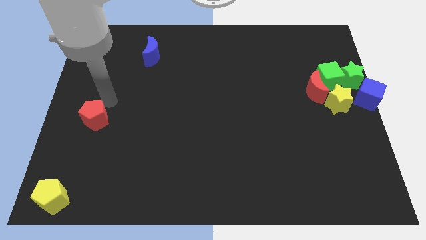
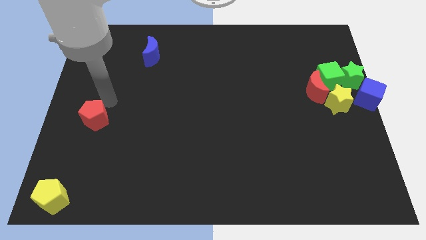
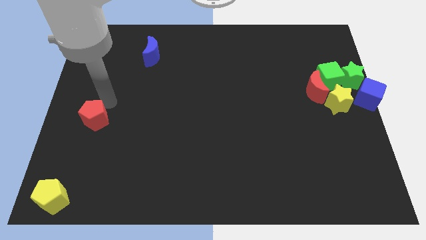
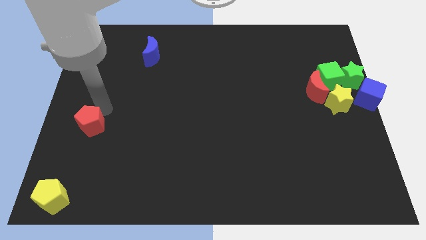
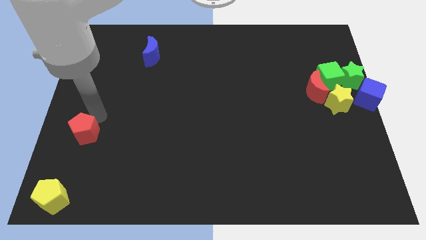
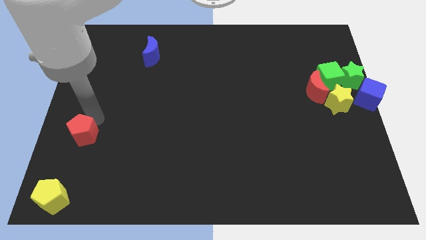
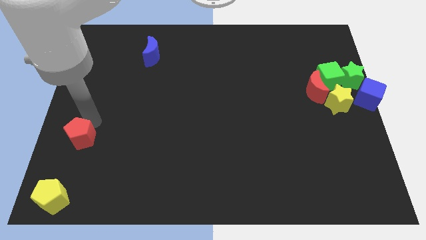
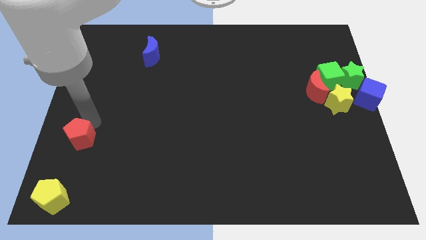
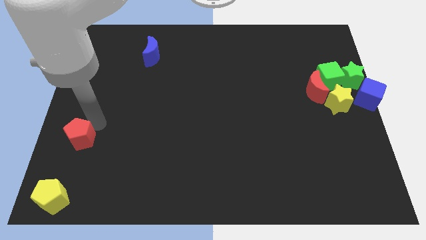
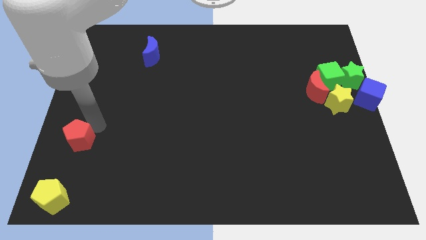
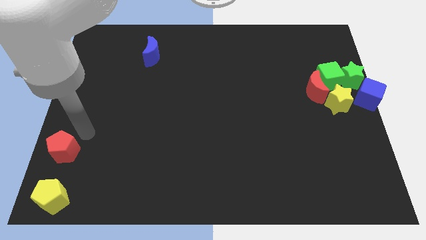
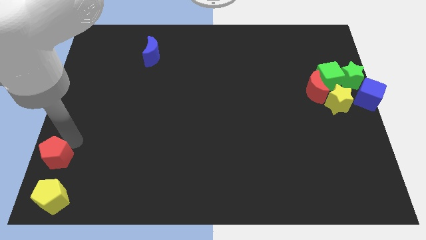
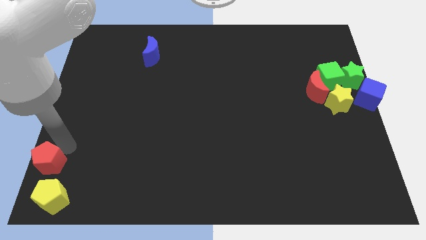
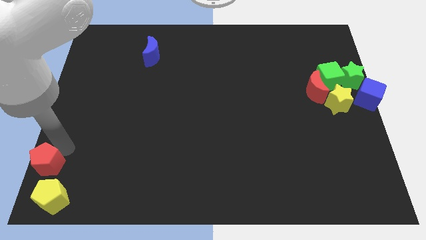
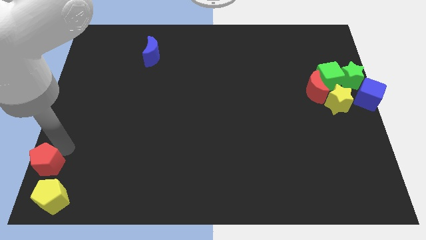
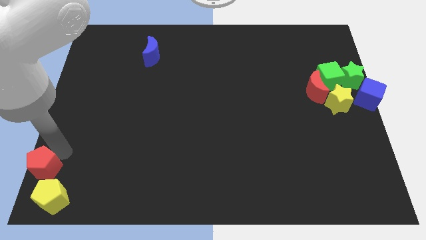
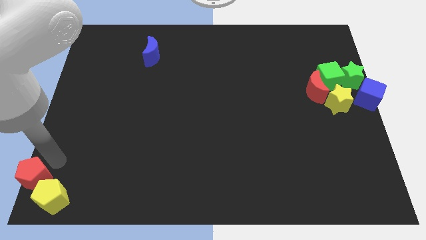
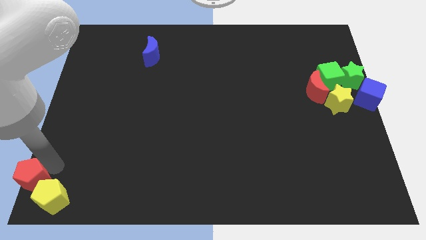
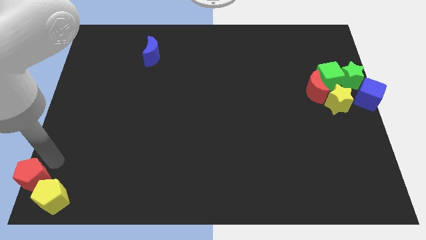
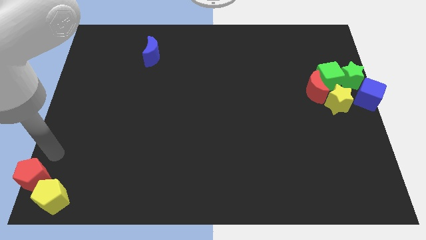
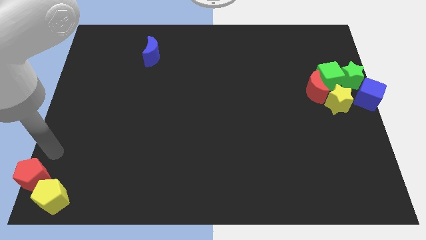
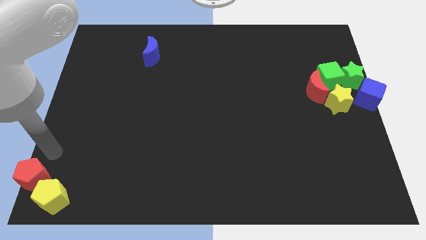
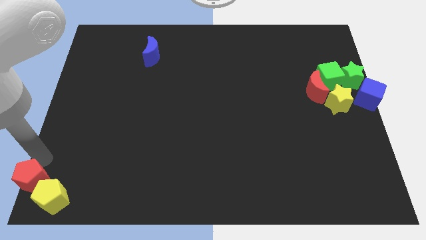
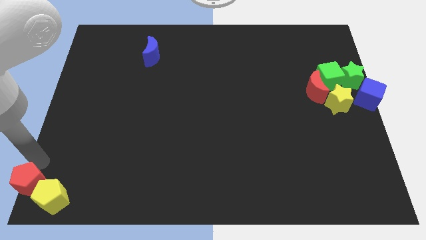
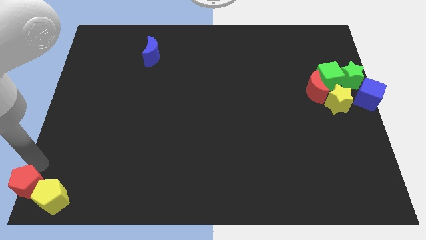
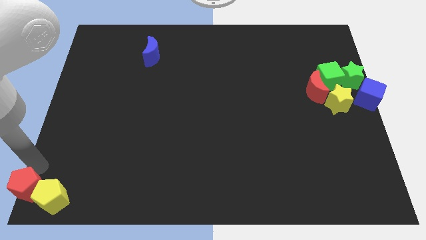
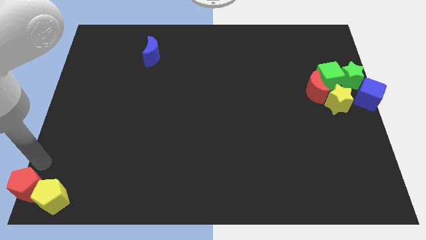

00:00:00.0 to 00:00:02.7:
move the red pentagon to the left of the yellow pentagon

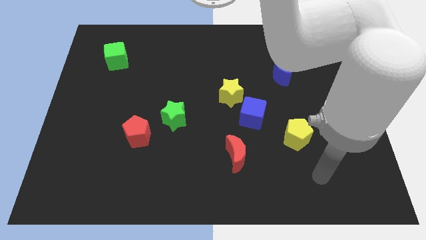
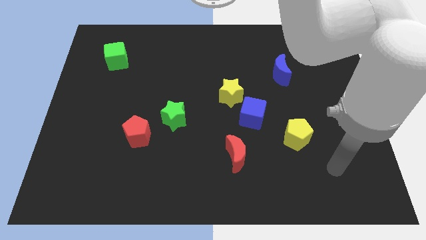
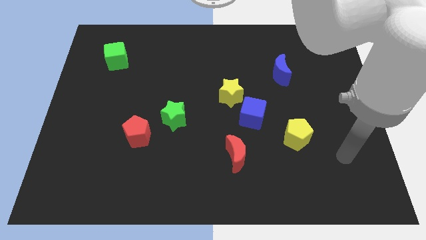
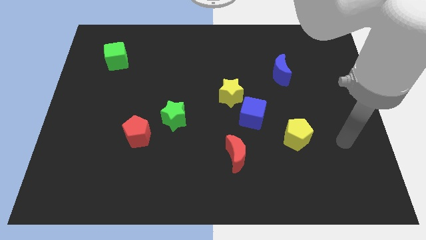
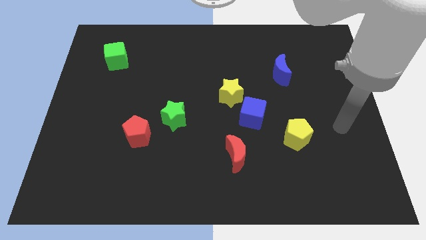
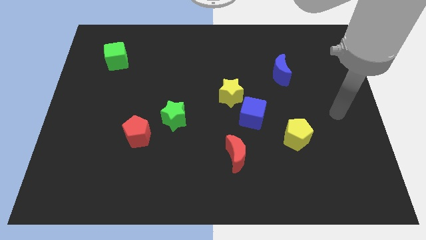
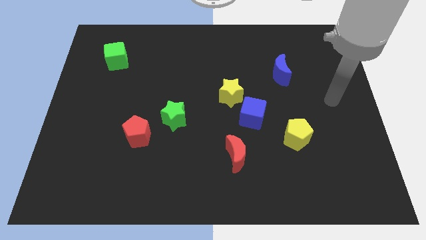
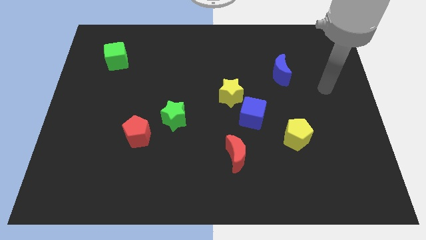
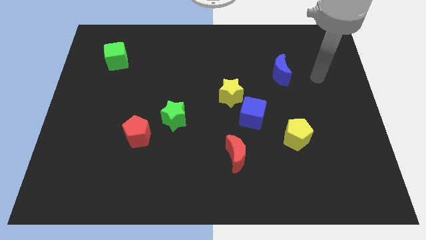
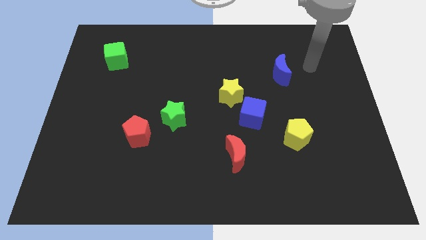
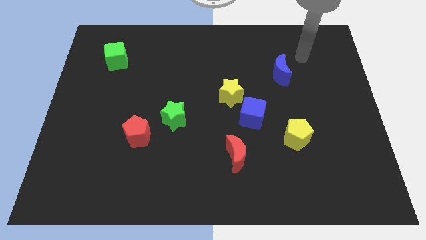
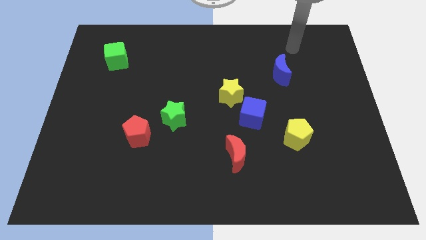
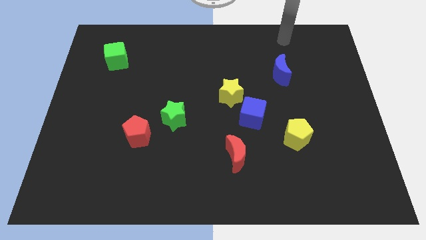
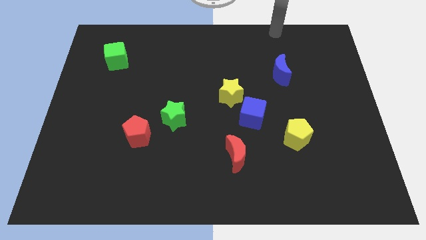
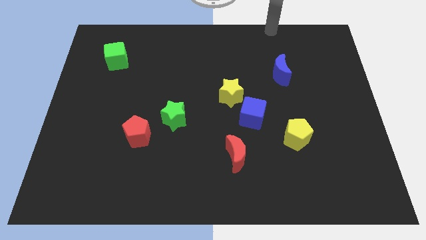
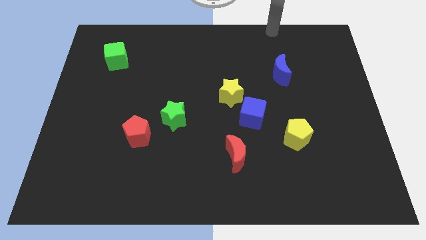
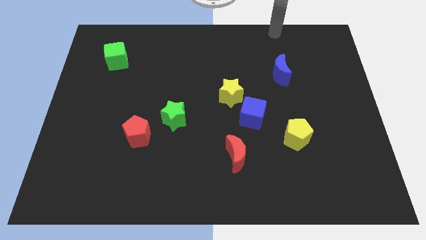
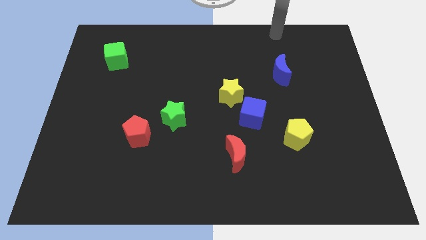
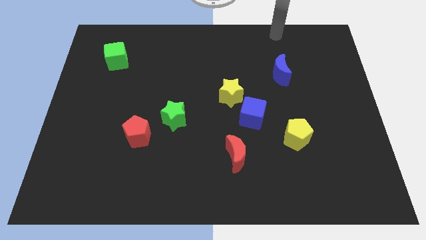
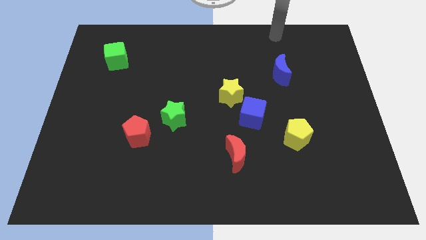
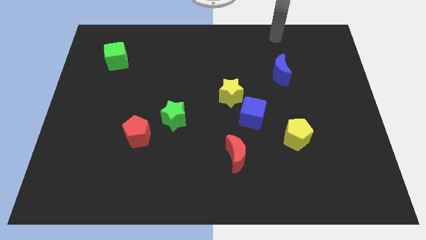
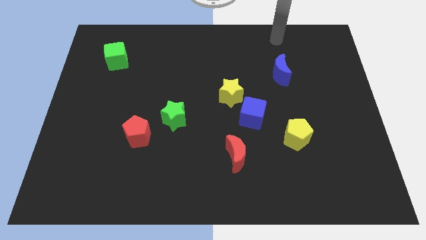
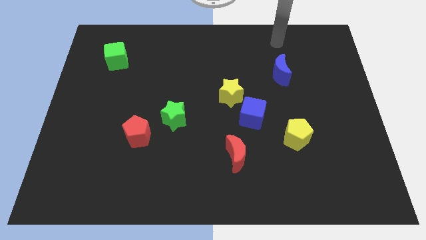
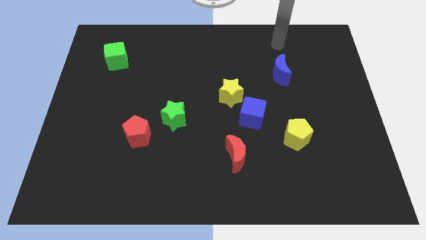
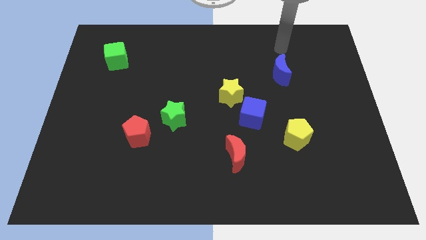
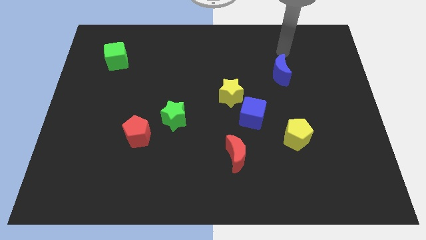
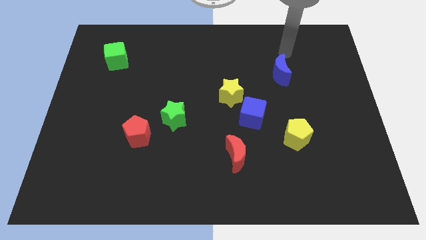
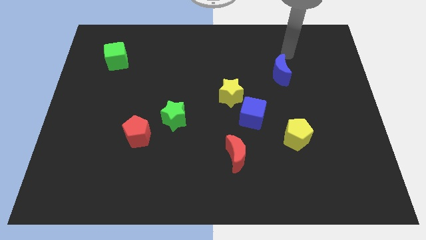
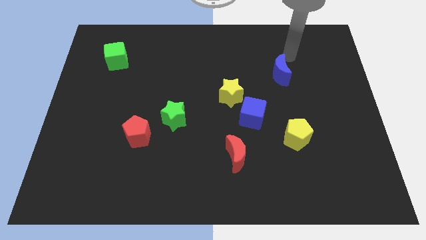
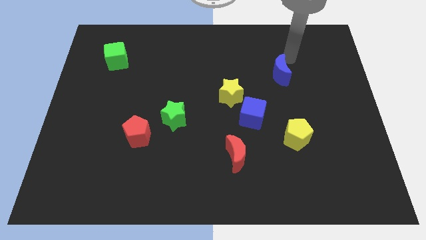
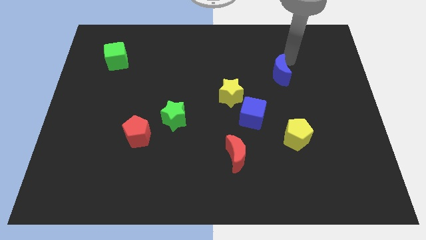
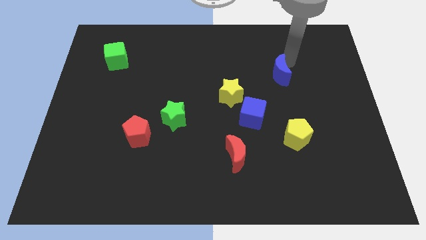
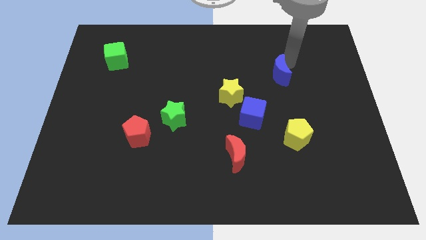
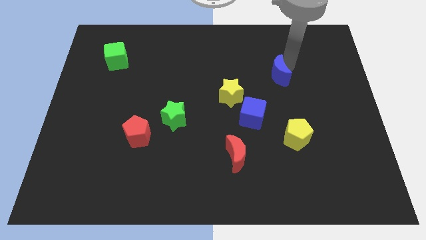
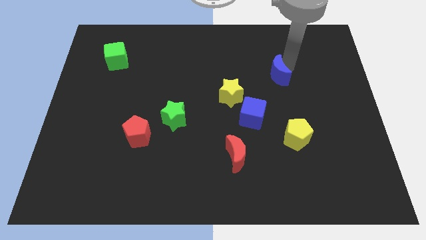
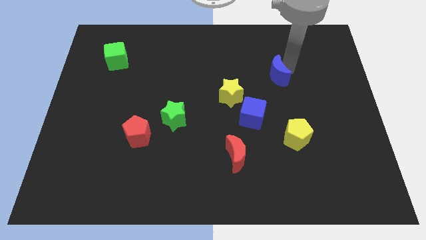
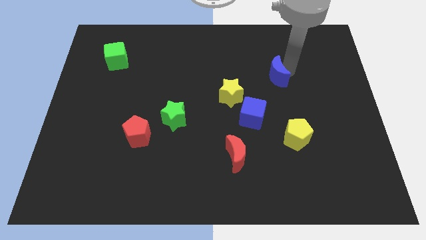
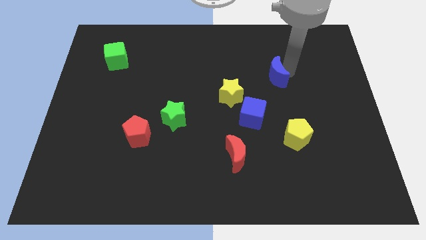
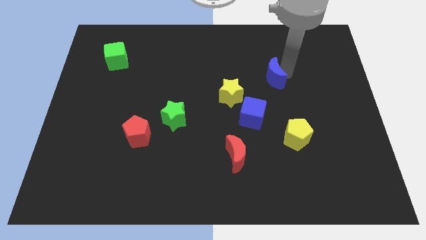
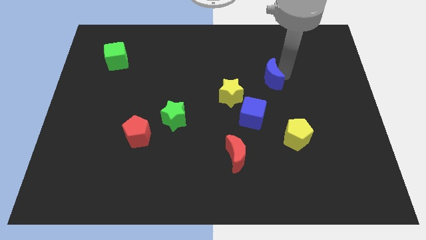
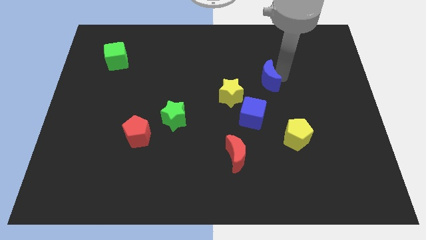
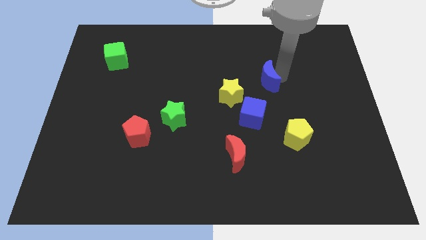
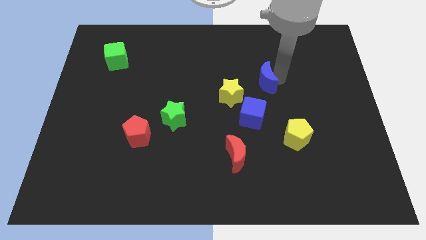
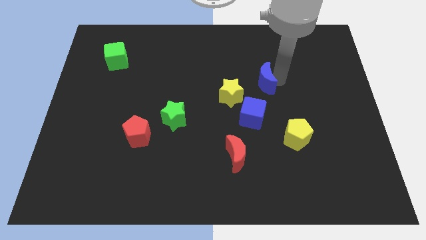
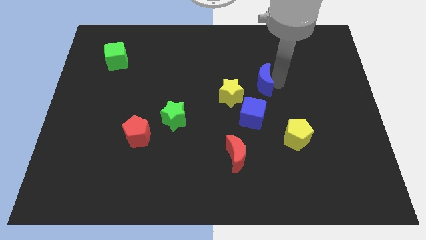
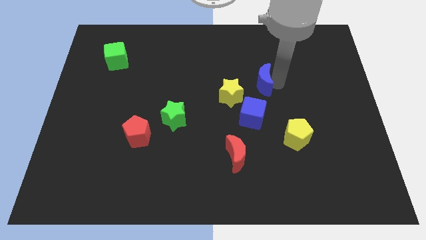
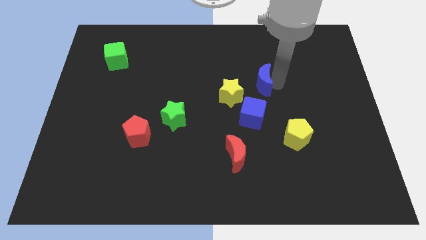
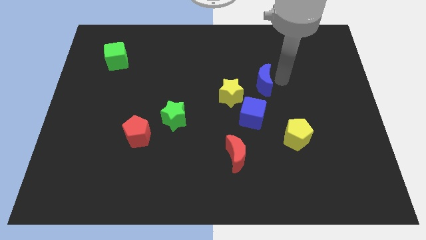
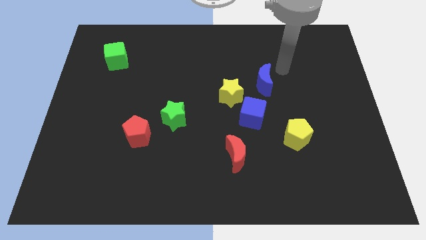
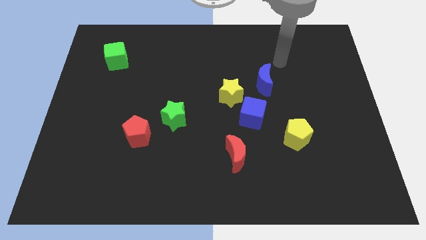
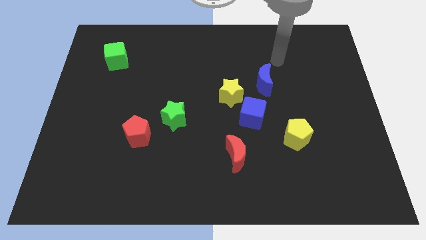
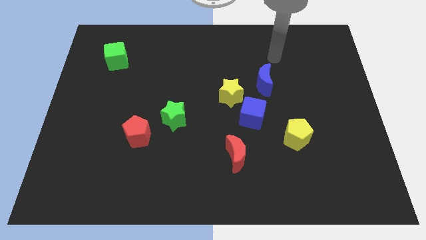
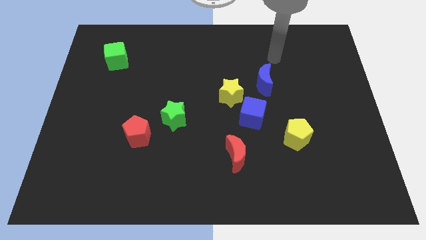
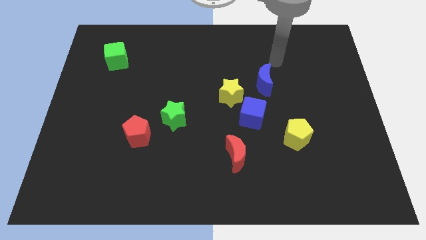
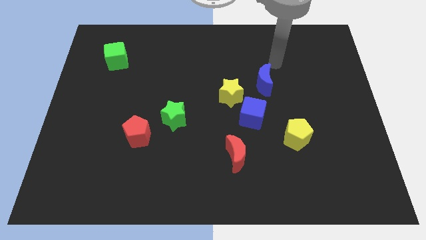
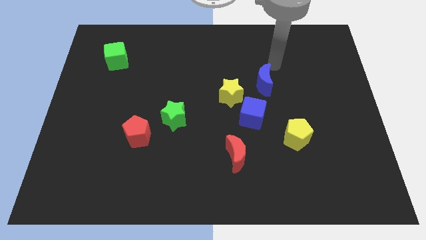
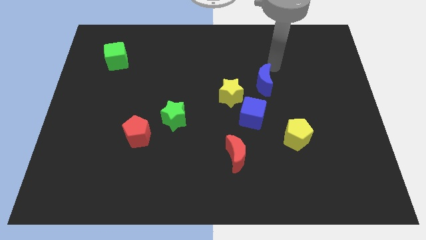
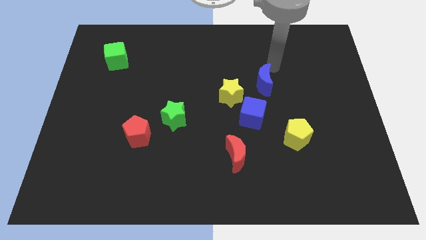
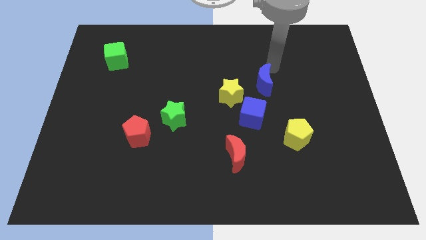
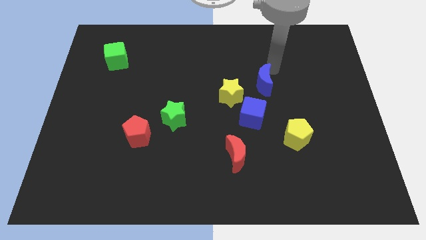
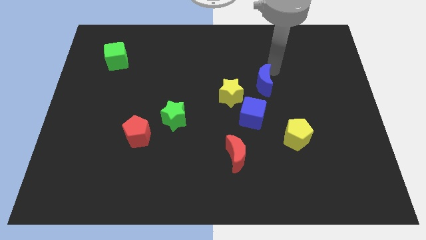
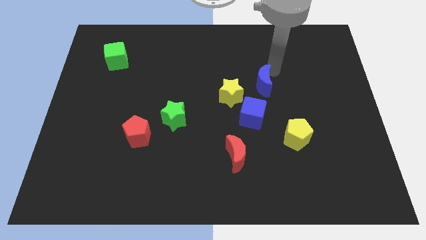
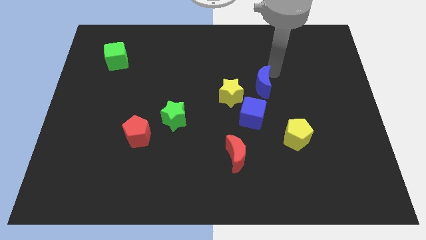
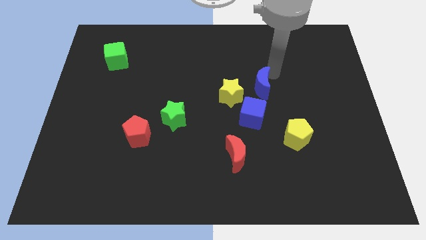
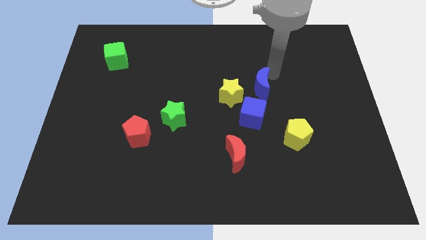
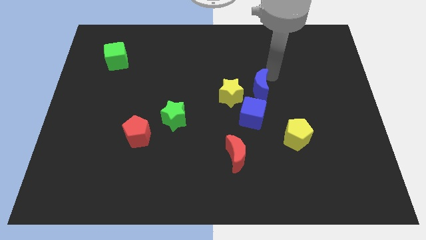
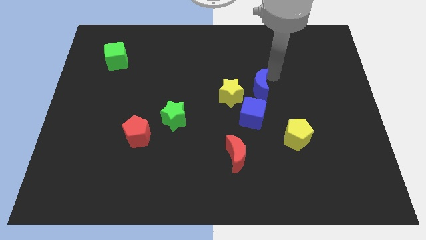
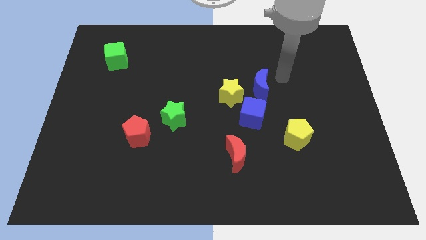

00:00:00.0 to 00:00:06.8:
push the blue moon closer to the blue cube
